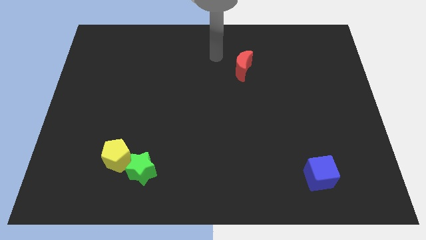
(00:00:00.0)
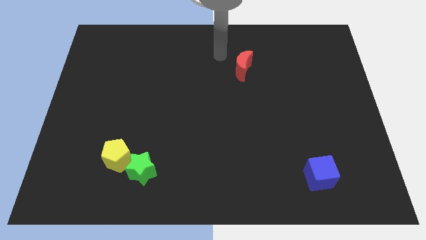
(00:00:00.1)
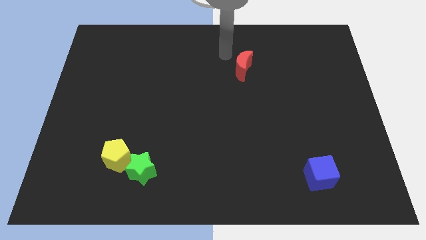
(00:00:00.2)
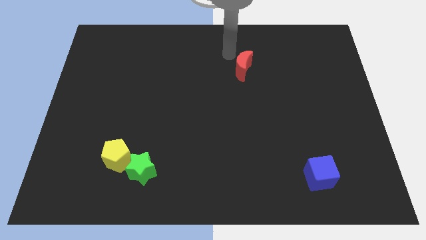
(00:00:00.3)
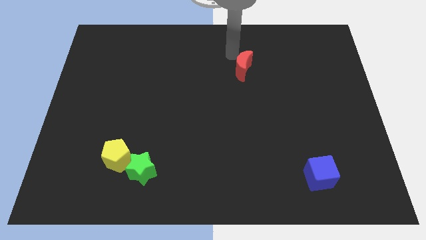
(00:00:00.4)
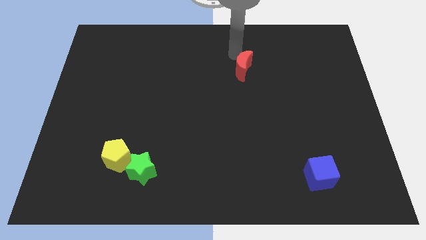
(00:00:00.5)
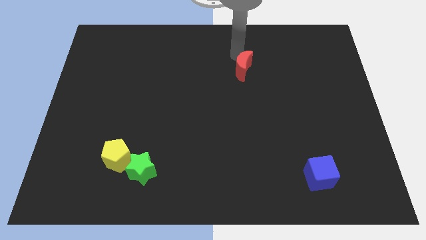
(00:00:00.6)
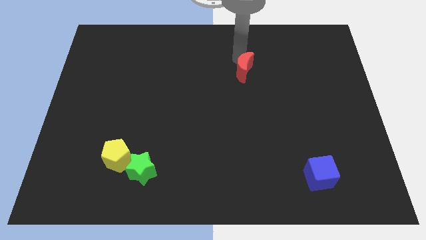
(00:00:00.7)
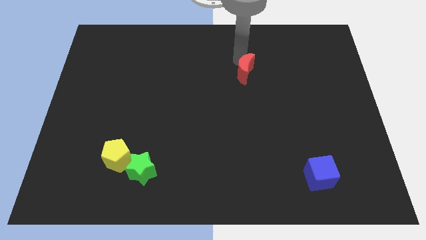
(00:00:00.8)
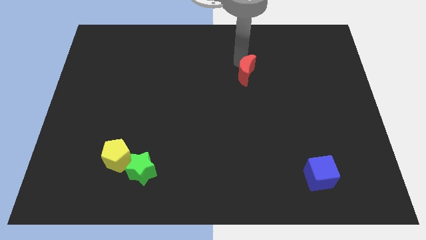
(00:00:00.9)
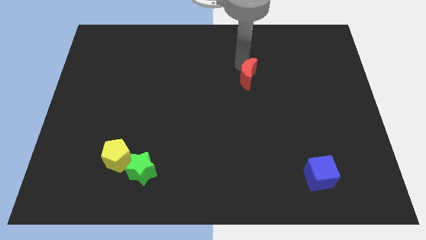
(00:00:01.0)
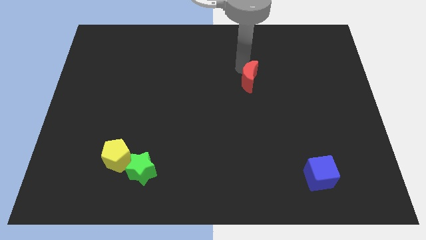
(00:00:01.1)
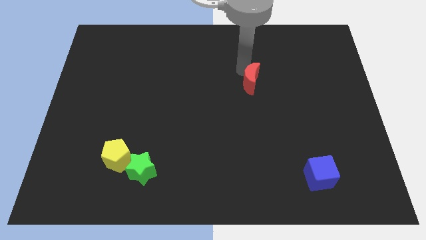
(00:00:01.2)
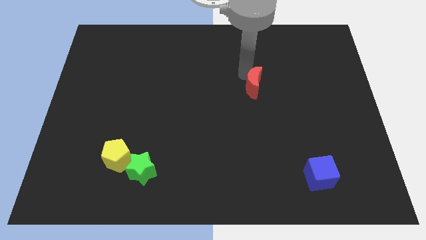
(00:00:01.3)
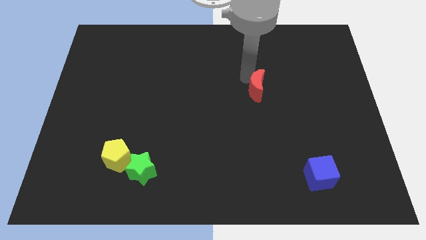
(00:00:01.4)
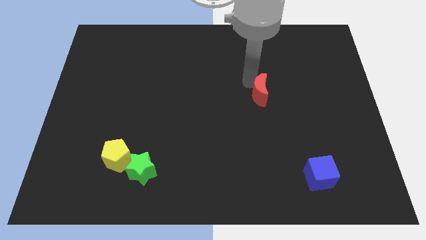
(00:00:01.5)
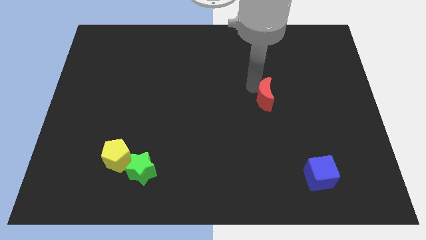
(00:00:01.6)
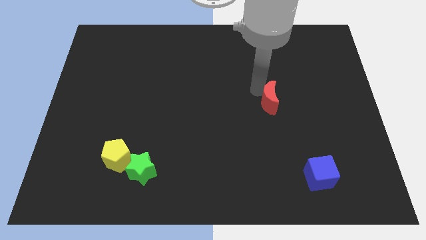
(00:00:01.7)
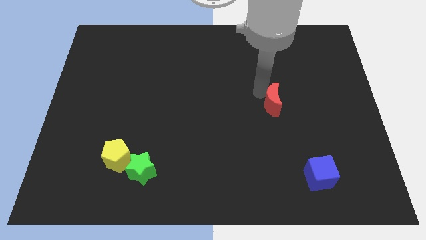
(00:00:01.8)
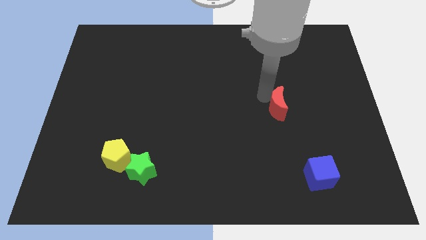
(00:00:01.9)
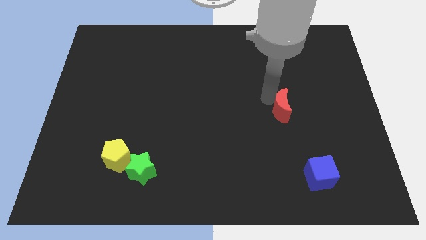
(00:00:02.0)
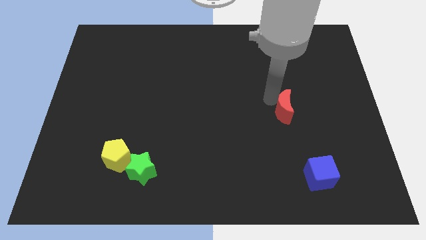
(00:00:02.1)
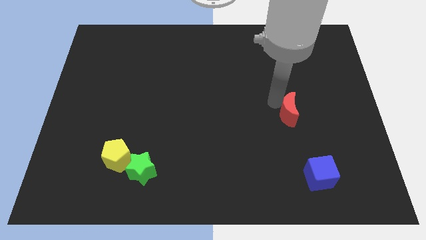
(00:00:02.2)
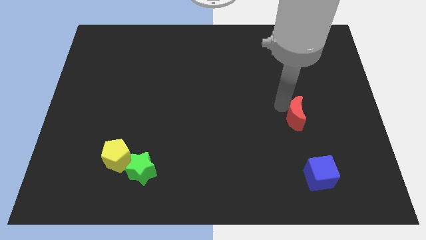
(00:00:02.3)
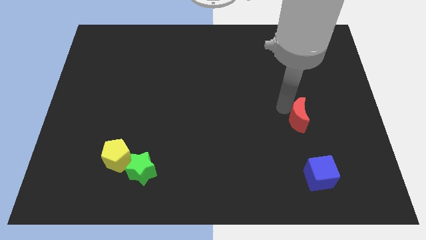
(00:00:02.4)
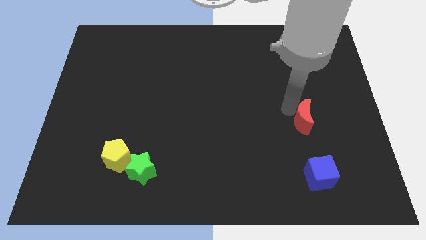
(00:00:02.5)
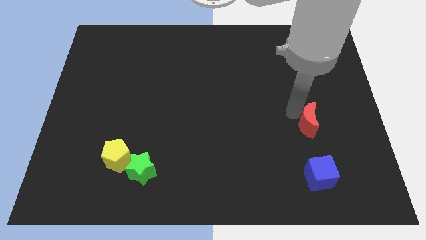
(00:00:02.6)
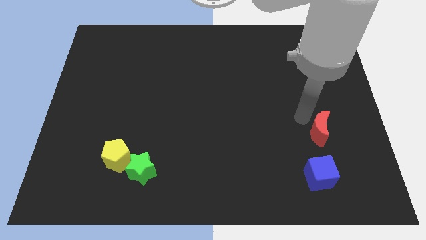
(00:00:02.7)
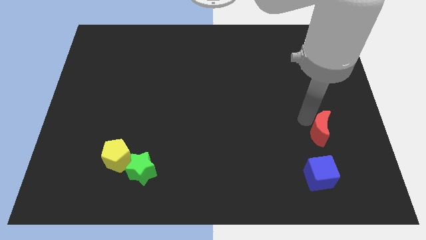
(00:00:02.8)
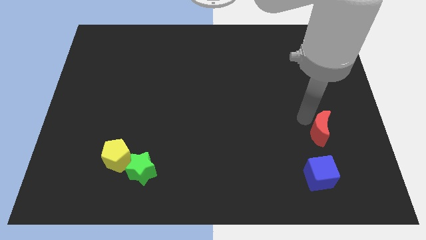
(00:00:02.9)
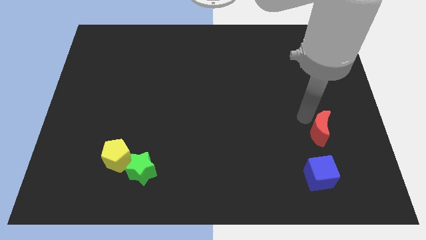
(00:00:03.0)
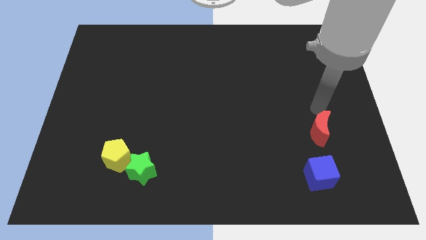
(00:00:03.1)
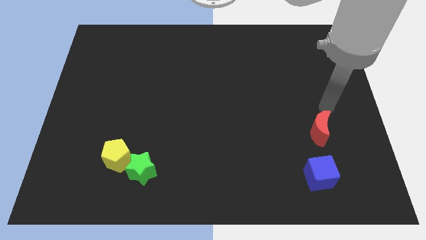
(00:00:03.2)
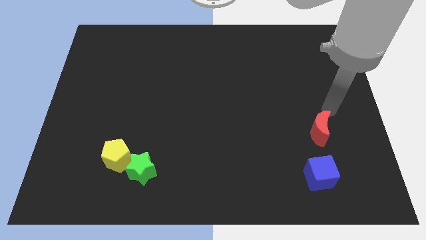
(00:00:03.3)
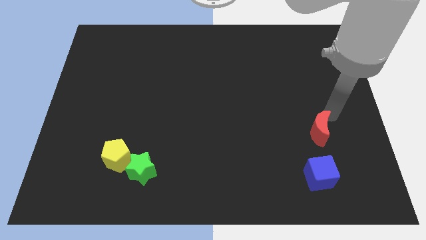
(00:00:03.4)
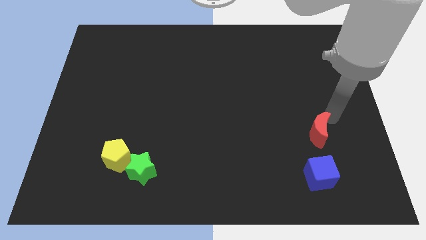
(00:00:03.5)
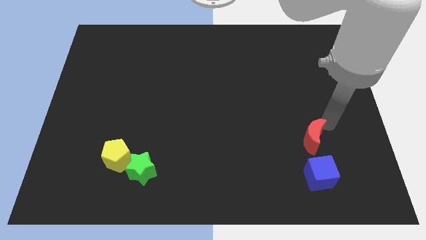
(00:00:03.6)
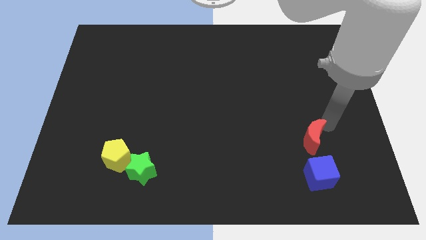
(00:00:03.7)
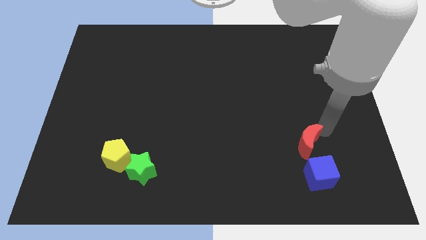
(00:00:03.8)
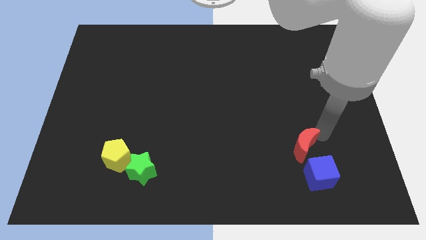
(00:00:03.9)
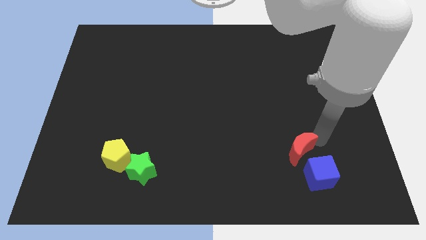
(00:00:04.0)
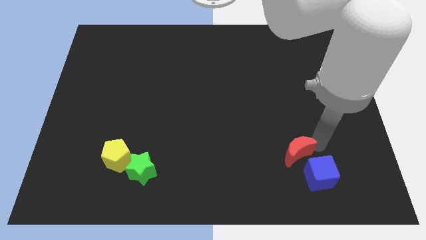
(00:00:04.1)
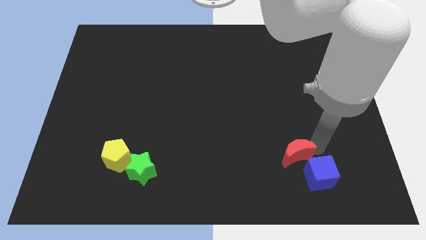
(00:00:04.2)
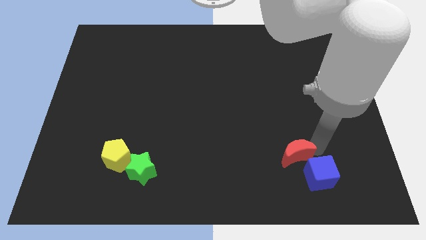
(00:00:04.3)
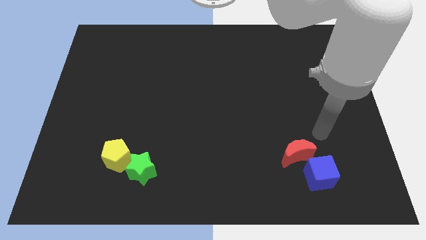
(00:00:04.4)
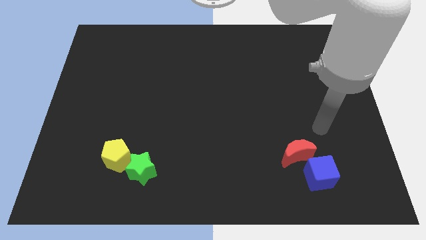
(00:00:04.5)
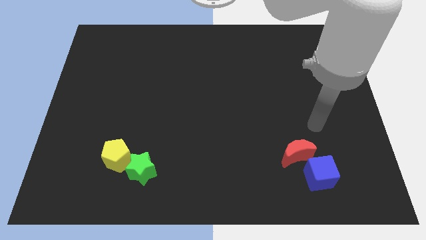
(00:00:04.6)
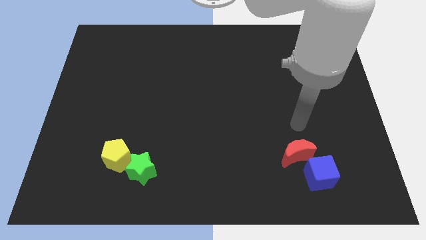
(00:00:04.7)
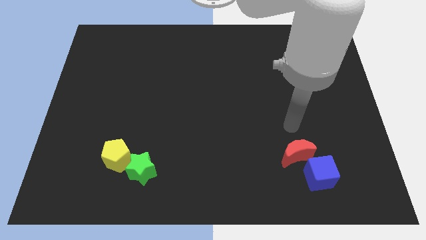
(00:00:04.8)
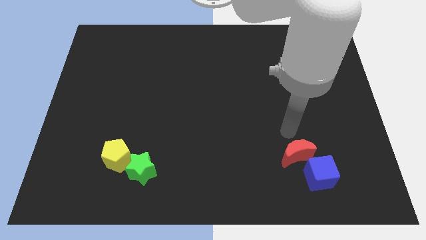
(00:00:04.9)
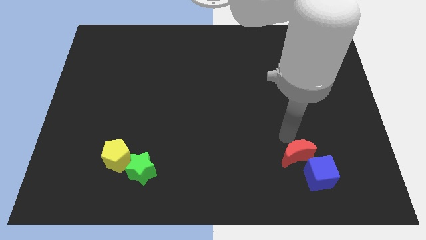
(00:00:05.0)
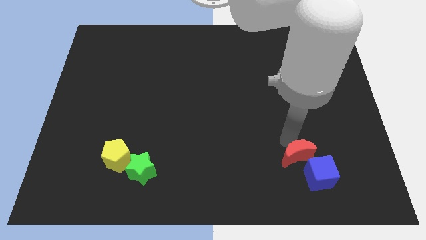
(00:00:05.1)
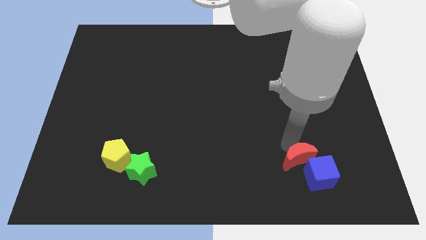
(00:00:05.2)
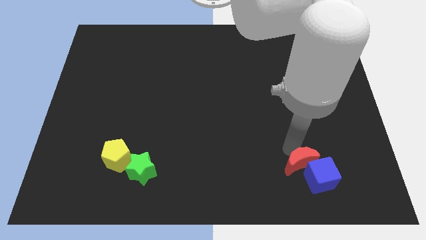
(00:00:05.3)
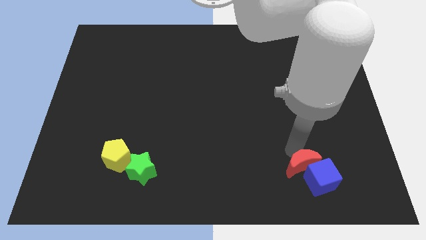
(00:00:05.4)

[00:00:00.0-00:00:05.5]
push the red block next to the blue block

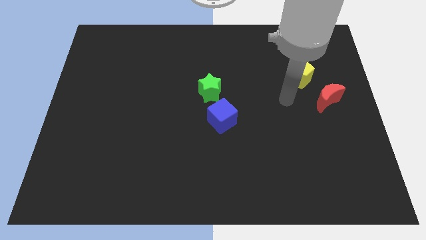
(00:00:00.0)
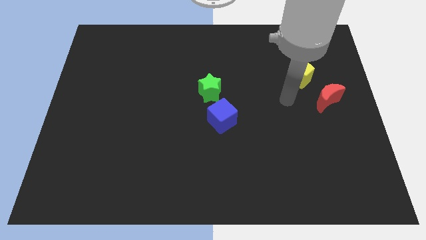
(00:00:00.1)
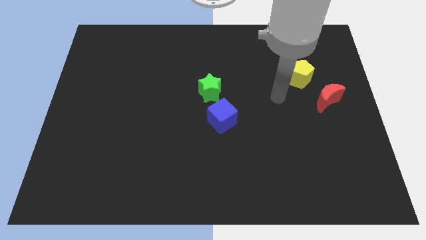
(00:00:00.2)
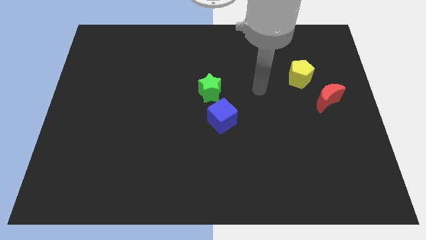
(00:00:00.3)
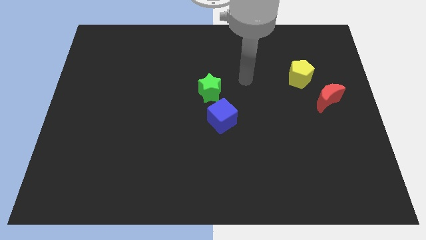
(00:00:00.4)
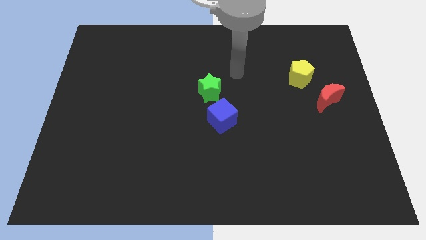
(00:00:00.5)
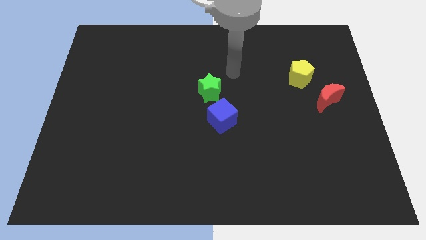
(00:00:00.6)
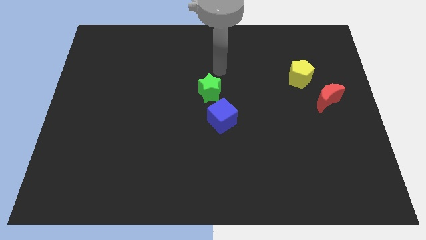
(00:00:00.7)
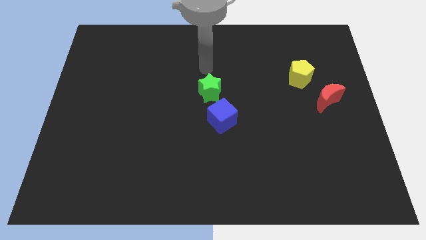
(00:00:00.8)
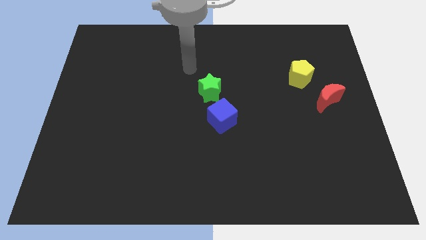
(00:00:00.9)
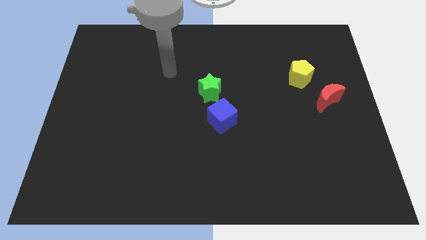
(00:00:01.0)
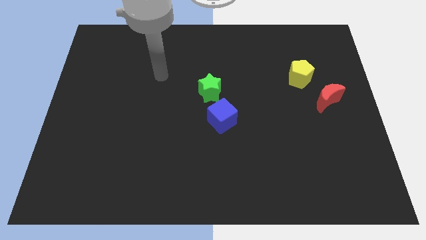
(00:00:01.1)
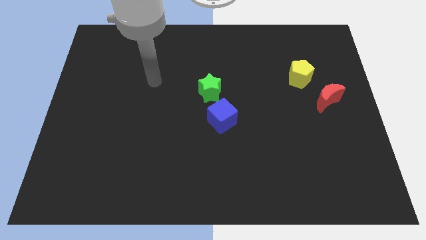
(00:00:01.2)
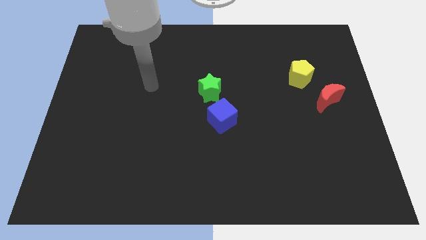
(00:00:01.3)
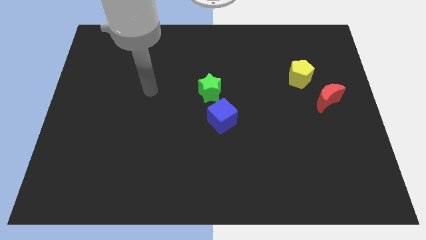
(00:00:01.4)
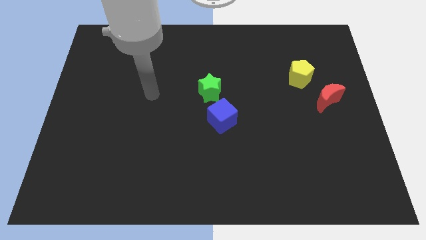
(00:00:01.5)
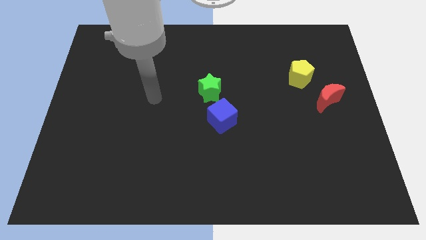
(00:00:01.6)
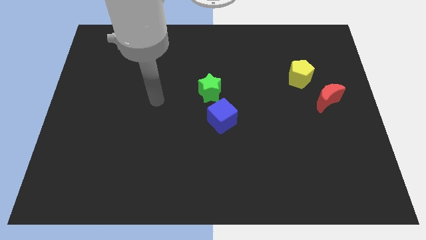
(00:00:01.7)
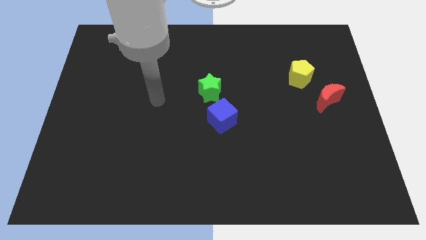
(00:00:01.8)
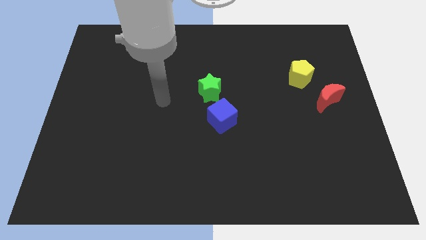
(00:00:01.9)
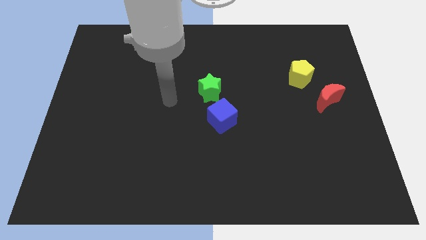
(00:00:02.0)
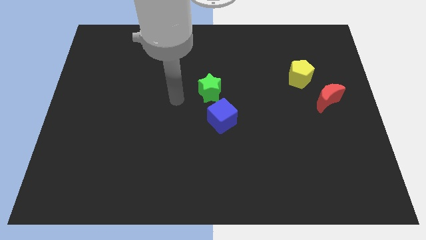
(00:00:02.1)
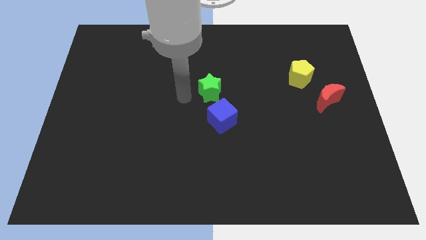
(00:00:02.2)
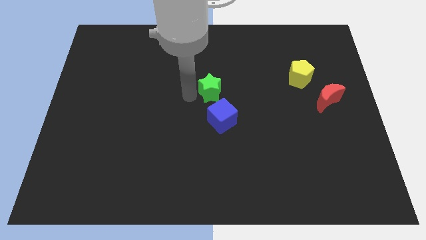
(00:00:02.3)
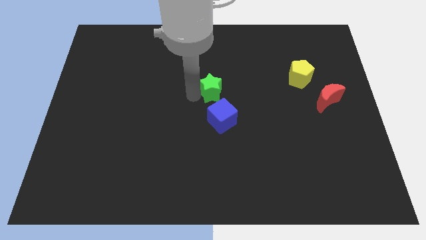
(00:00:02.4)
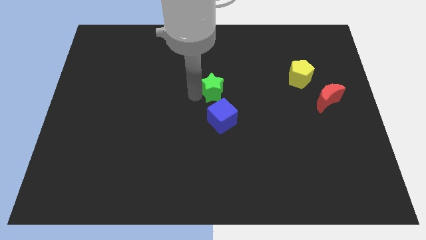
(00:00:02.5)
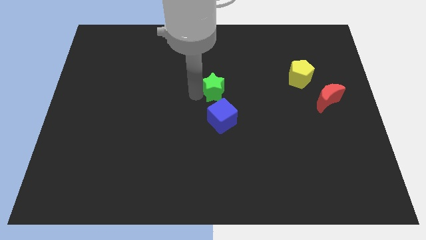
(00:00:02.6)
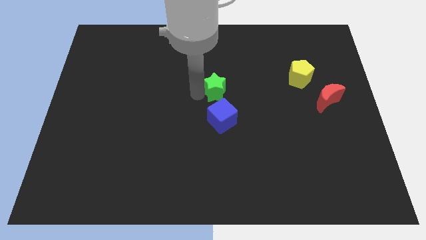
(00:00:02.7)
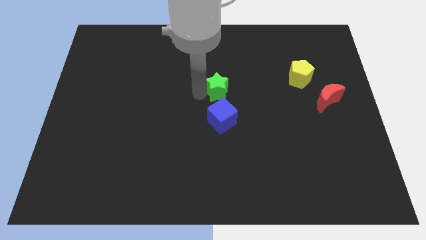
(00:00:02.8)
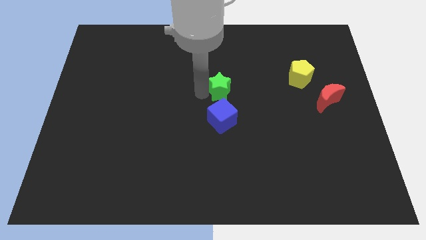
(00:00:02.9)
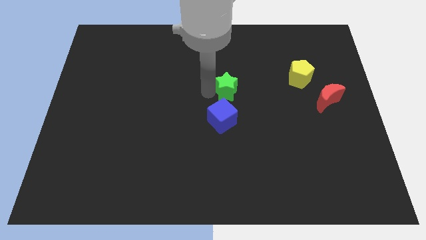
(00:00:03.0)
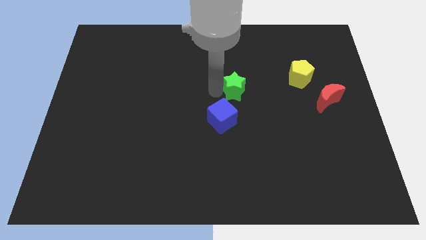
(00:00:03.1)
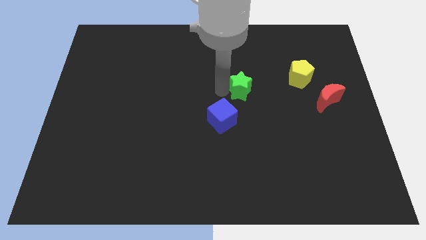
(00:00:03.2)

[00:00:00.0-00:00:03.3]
put the green star to the yellow block

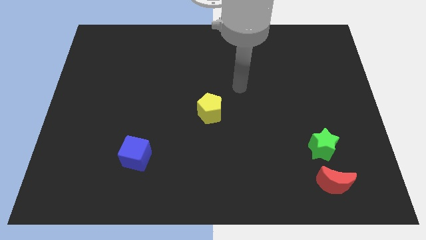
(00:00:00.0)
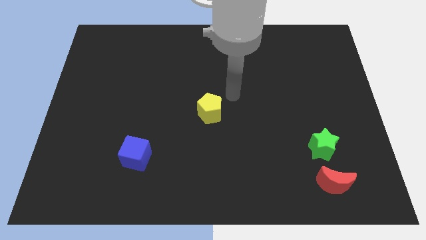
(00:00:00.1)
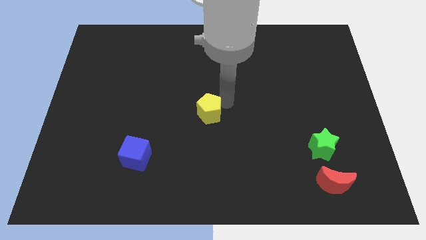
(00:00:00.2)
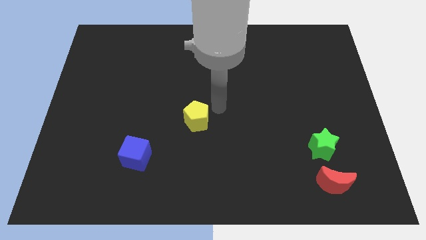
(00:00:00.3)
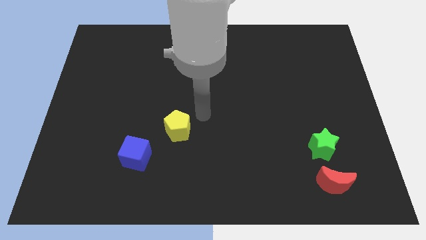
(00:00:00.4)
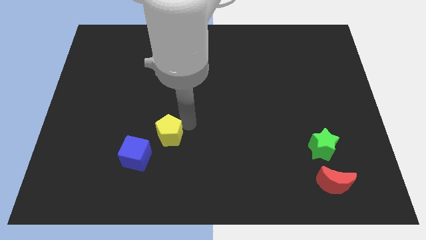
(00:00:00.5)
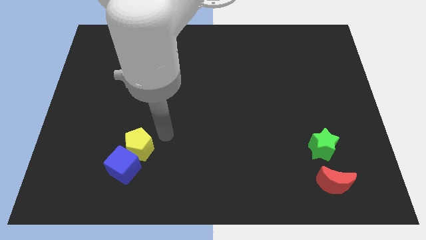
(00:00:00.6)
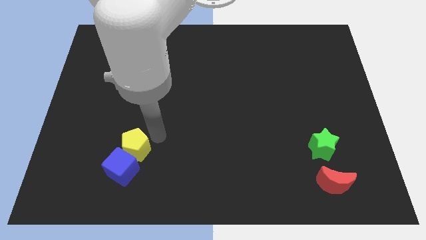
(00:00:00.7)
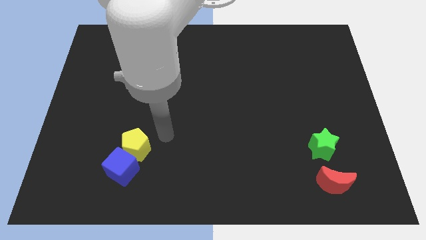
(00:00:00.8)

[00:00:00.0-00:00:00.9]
slide the pentagon next to the blue cube
